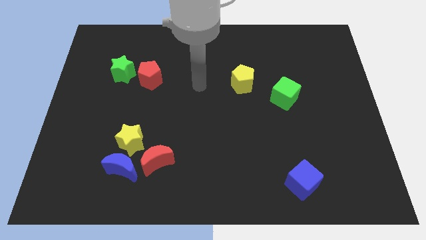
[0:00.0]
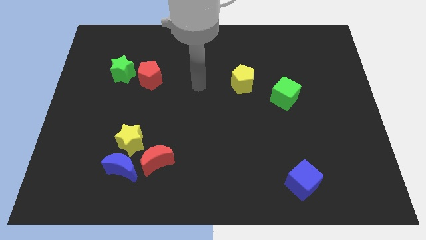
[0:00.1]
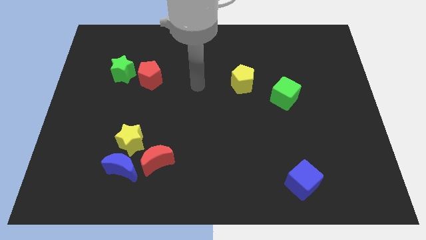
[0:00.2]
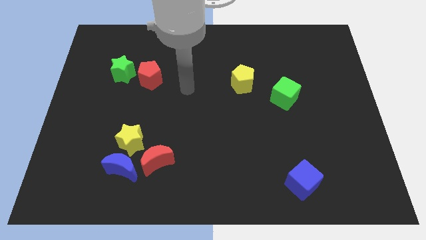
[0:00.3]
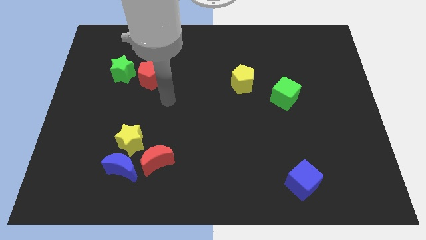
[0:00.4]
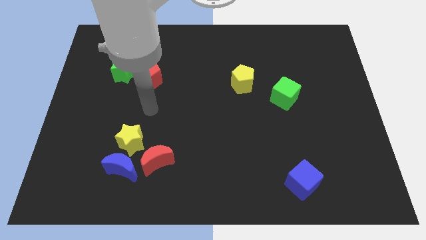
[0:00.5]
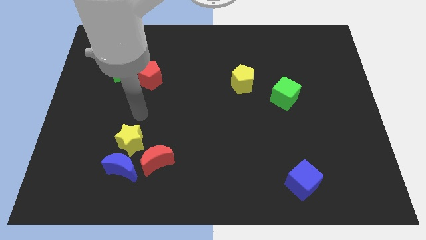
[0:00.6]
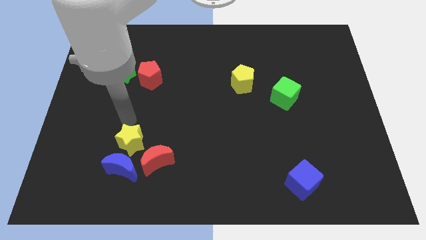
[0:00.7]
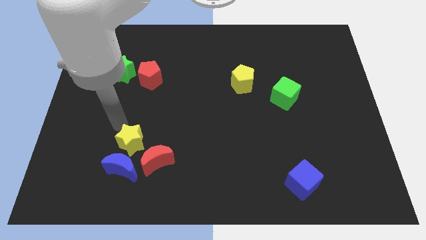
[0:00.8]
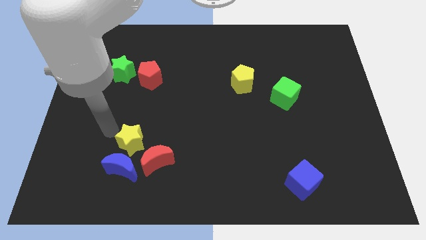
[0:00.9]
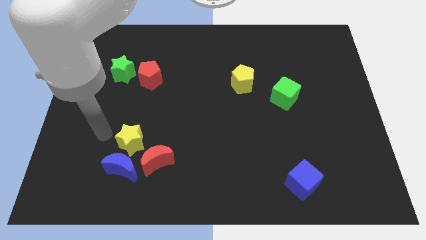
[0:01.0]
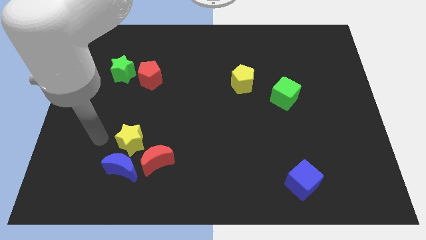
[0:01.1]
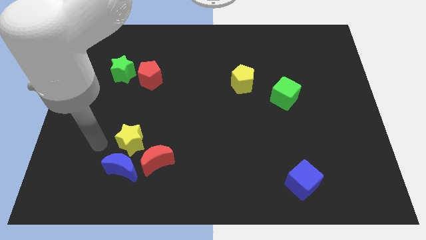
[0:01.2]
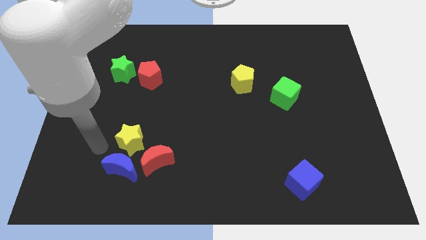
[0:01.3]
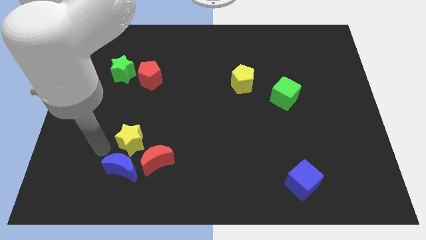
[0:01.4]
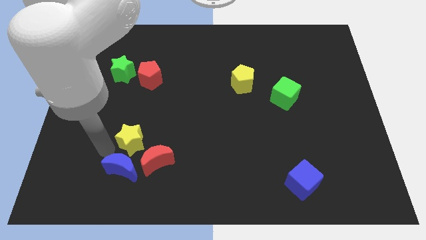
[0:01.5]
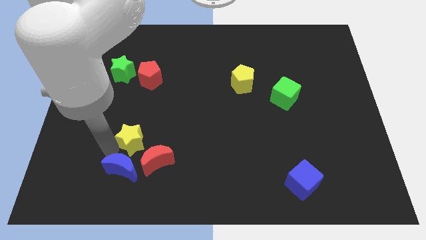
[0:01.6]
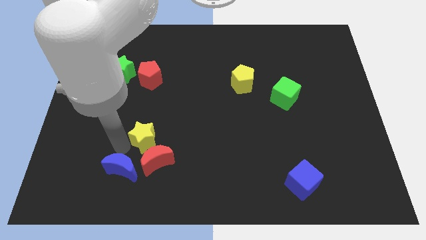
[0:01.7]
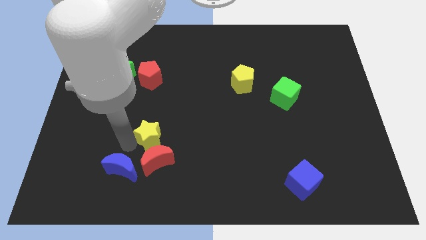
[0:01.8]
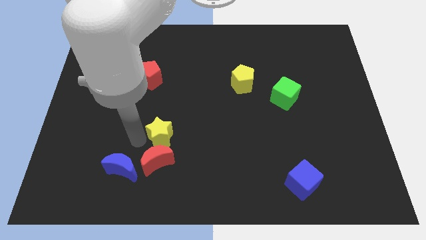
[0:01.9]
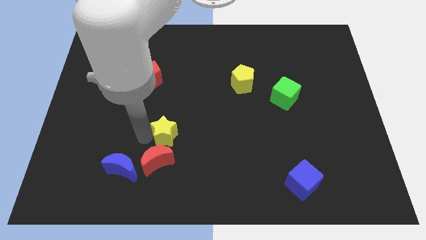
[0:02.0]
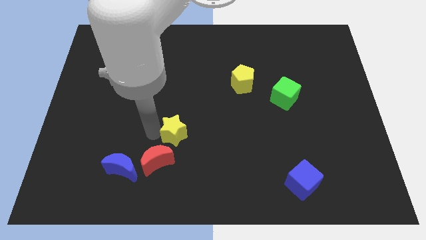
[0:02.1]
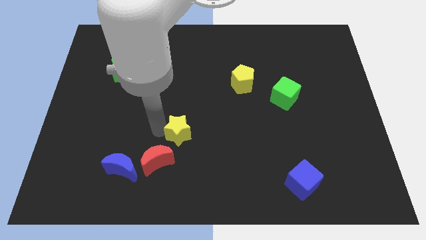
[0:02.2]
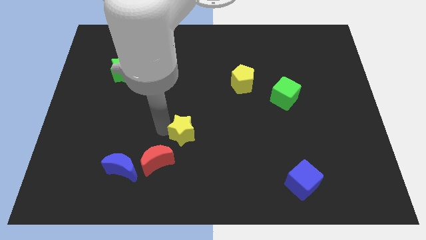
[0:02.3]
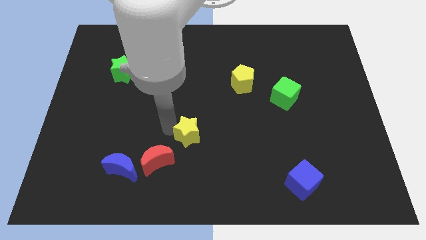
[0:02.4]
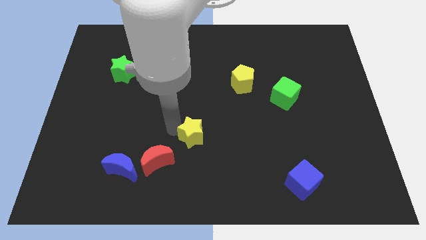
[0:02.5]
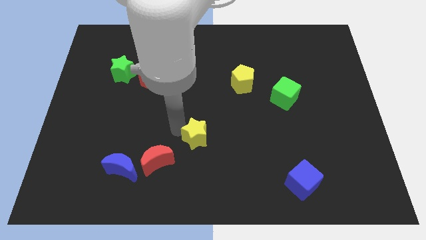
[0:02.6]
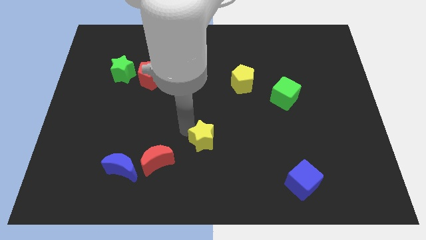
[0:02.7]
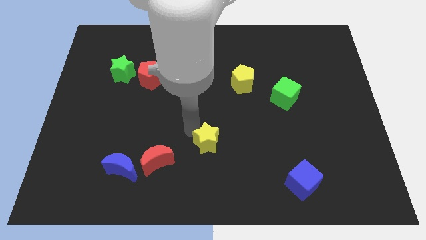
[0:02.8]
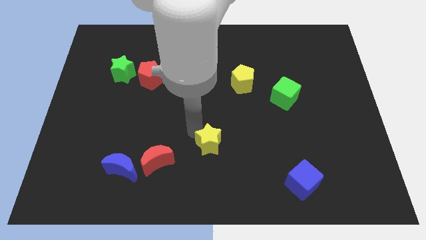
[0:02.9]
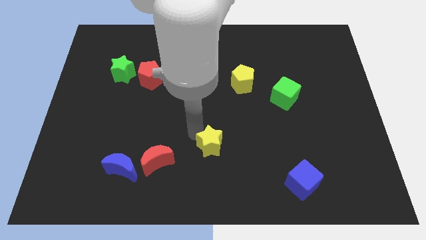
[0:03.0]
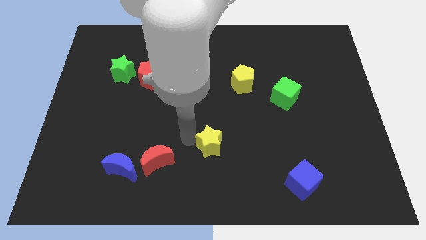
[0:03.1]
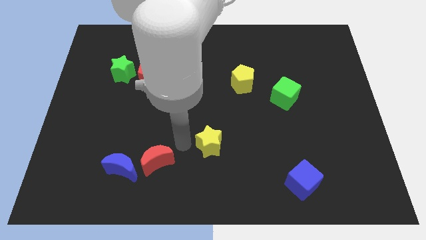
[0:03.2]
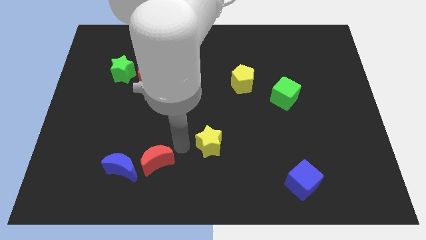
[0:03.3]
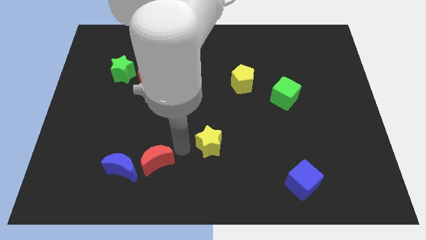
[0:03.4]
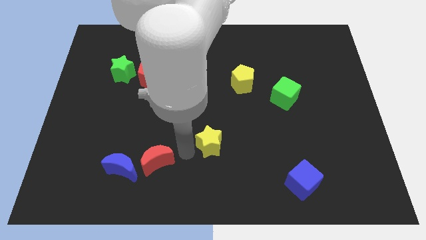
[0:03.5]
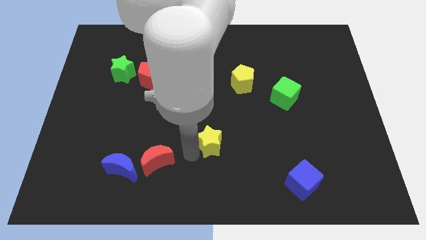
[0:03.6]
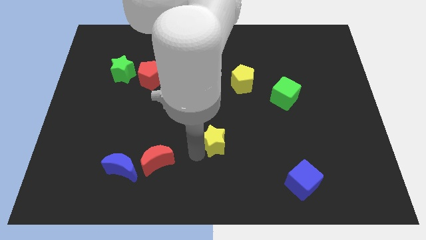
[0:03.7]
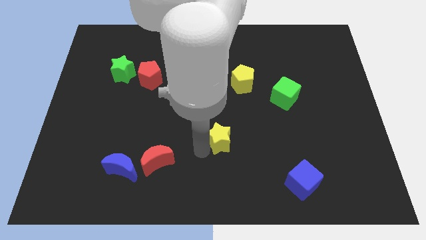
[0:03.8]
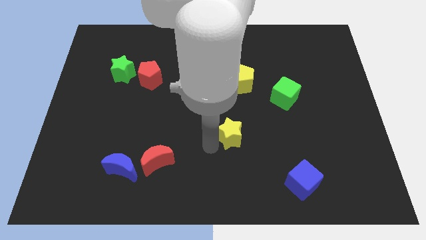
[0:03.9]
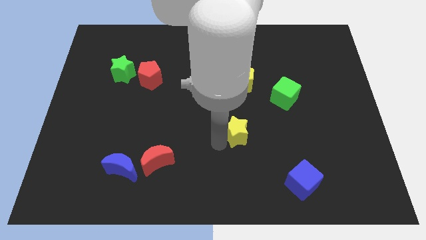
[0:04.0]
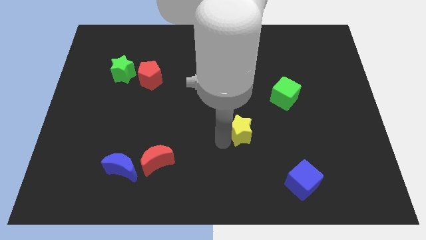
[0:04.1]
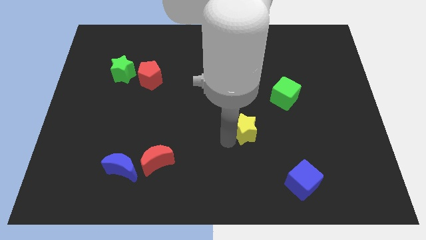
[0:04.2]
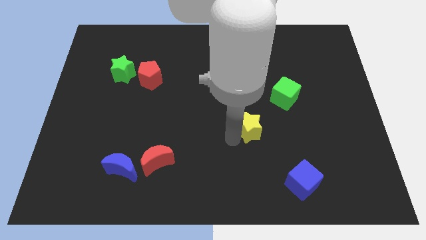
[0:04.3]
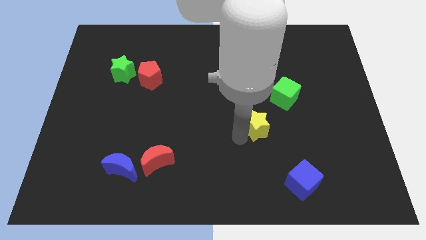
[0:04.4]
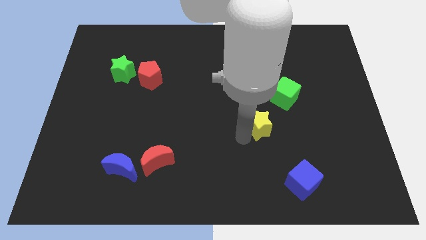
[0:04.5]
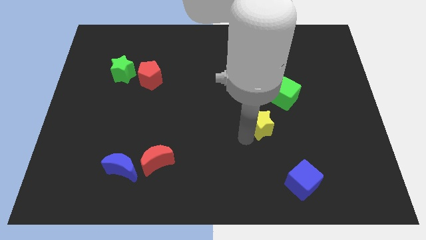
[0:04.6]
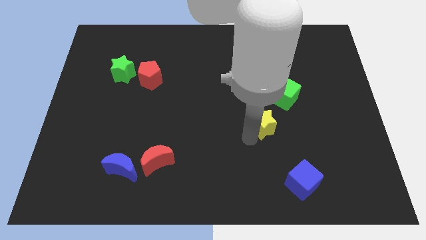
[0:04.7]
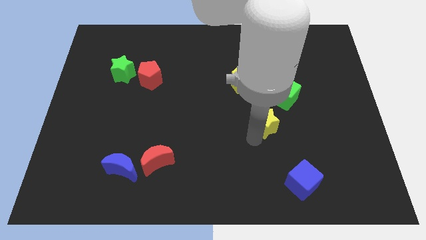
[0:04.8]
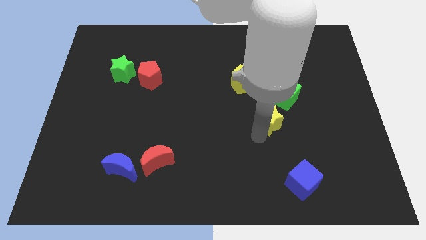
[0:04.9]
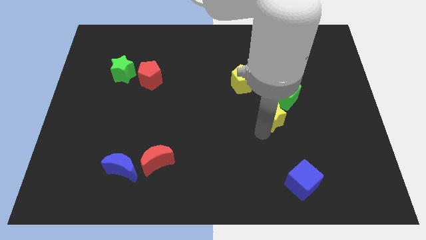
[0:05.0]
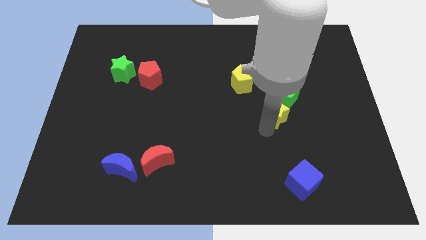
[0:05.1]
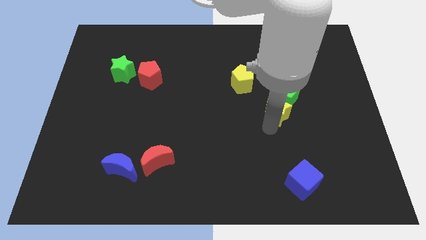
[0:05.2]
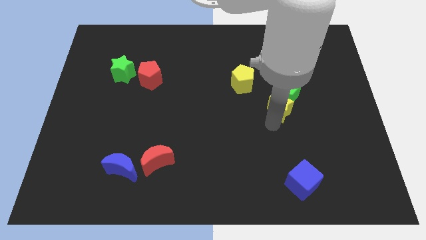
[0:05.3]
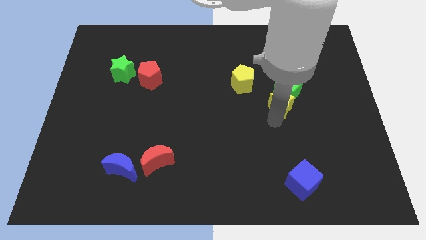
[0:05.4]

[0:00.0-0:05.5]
put the yellow star towards the green cube

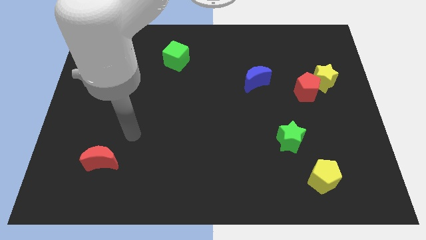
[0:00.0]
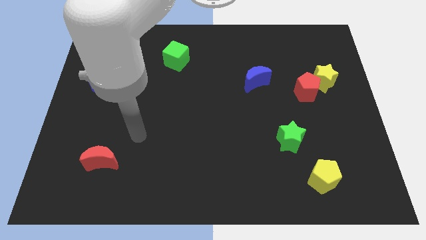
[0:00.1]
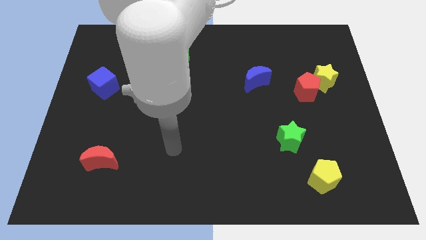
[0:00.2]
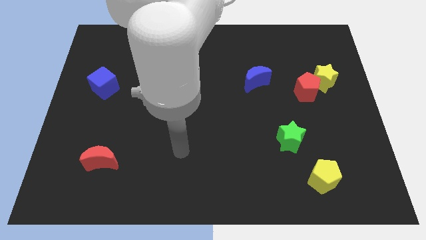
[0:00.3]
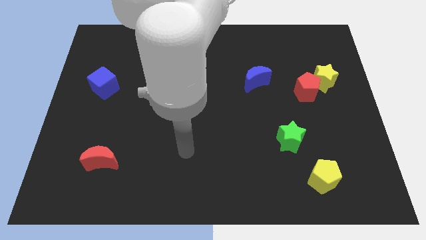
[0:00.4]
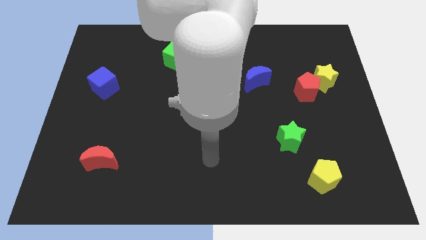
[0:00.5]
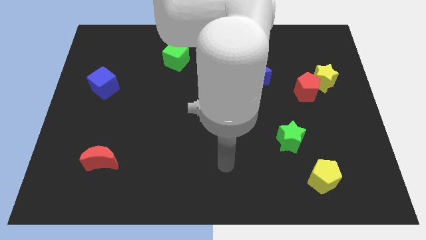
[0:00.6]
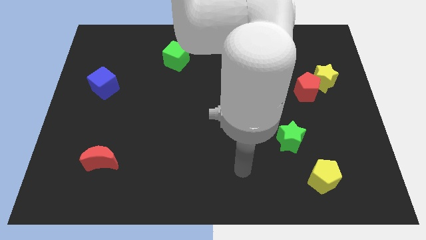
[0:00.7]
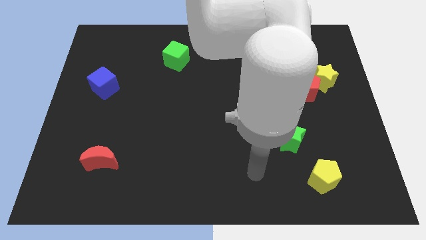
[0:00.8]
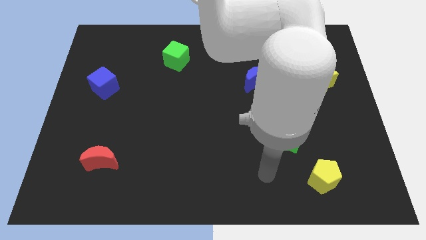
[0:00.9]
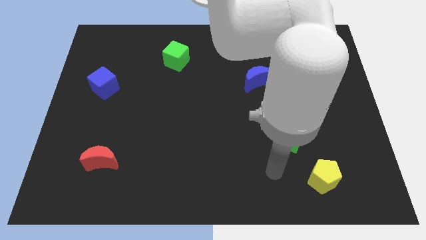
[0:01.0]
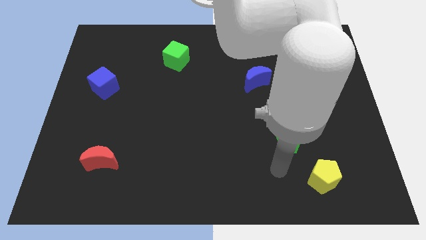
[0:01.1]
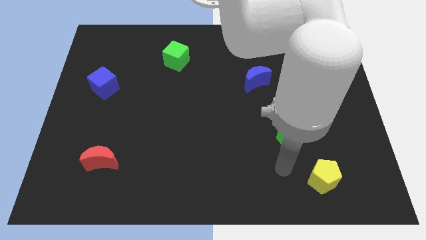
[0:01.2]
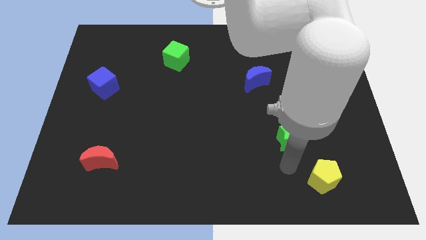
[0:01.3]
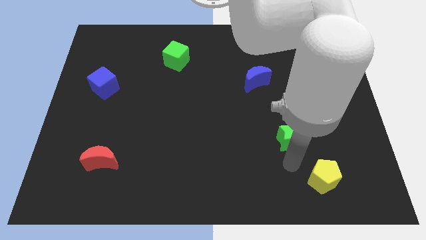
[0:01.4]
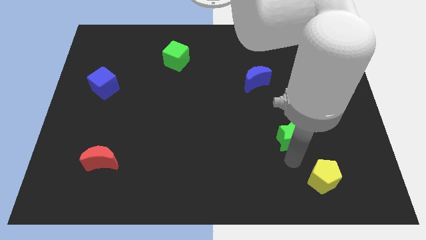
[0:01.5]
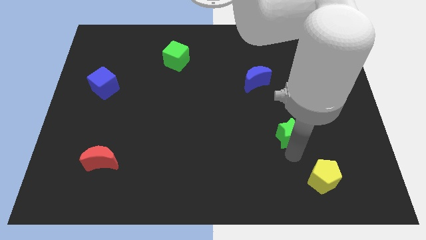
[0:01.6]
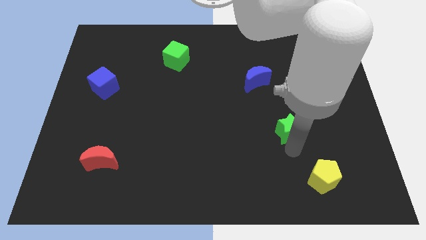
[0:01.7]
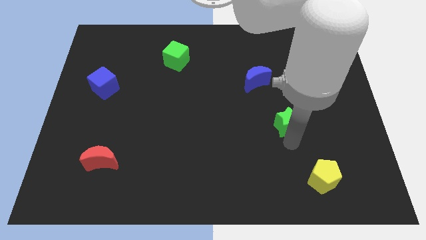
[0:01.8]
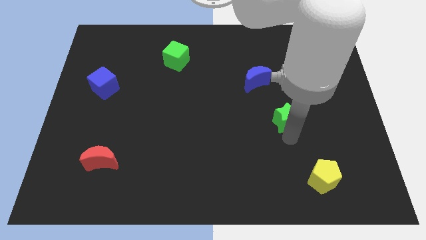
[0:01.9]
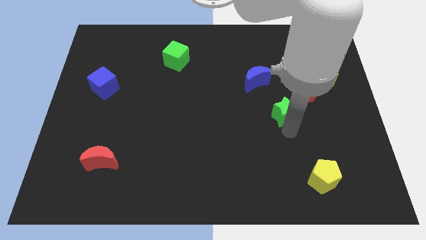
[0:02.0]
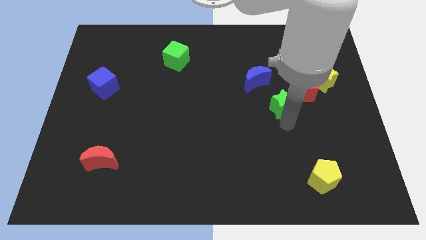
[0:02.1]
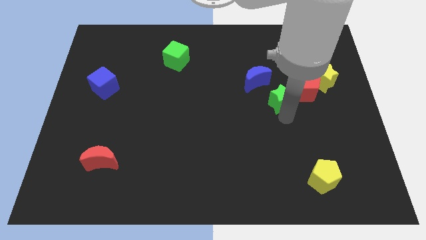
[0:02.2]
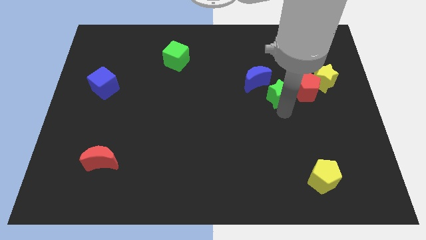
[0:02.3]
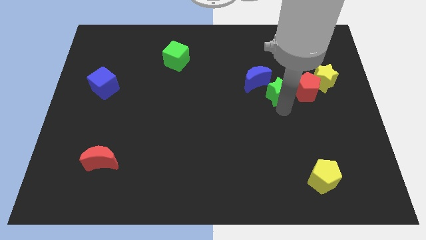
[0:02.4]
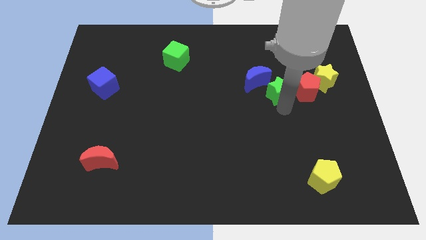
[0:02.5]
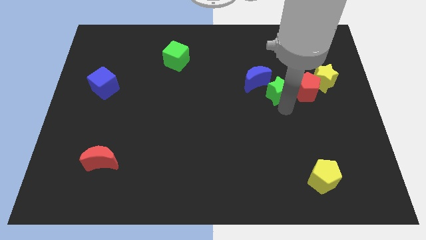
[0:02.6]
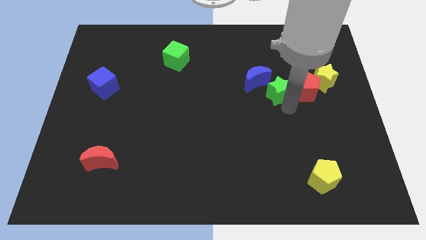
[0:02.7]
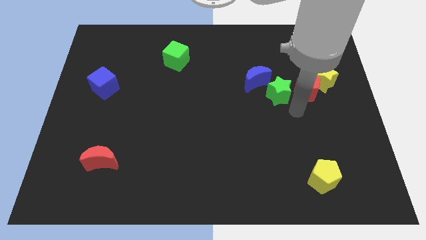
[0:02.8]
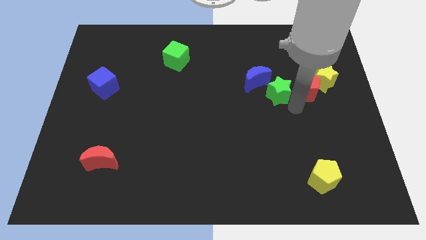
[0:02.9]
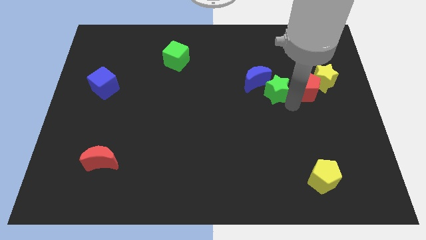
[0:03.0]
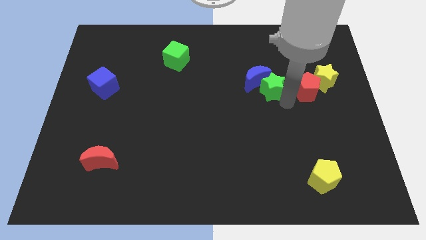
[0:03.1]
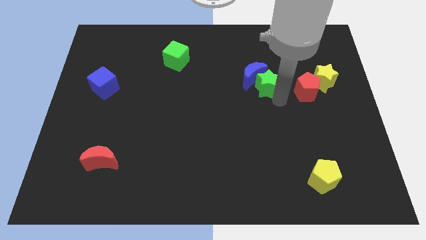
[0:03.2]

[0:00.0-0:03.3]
put the green star to the blue moon
